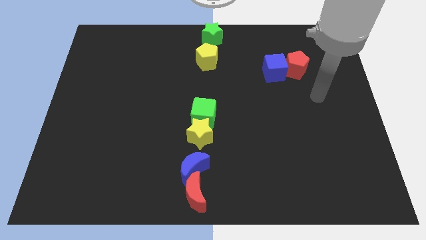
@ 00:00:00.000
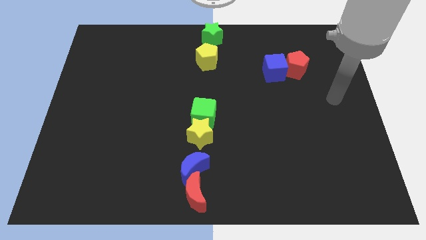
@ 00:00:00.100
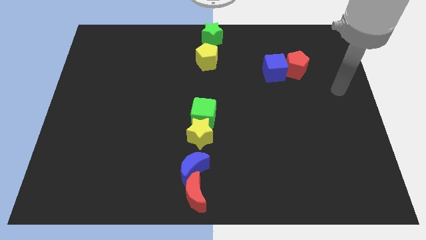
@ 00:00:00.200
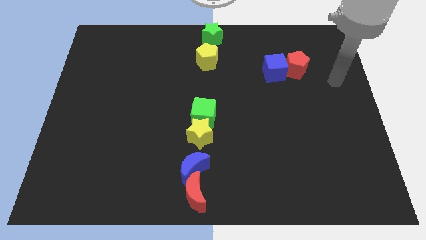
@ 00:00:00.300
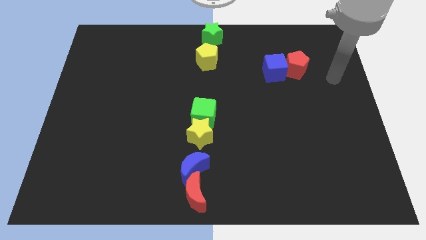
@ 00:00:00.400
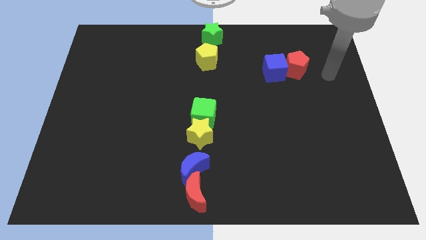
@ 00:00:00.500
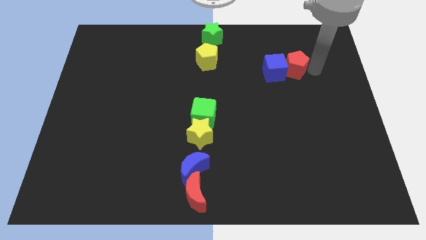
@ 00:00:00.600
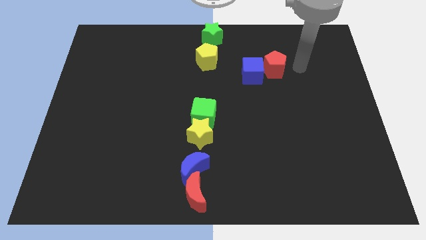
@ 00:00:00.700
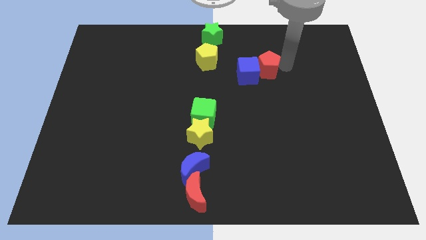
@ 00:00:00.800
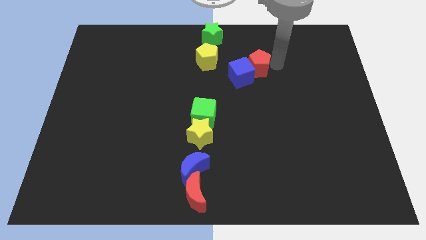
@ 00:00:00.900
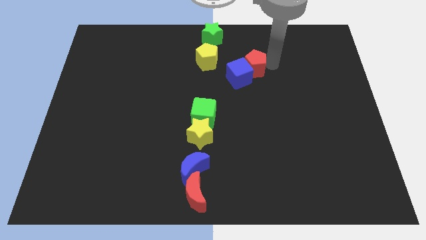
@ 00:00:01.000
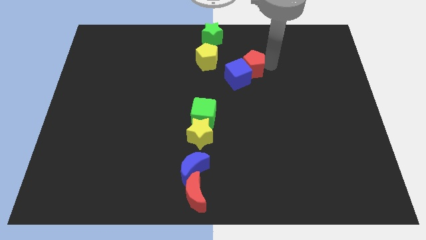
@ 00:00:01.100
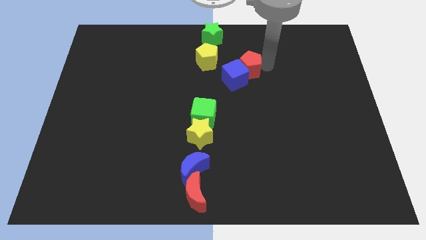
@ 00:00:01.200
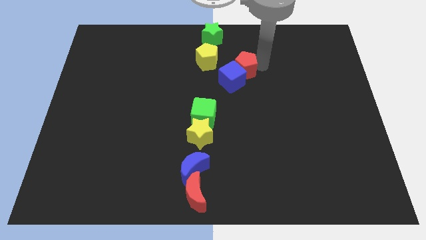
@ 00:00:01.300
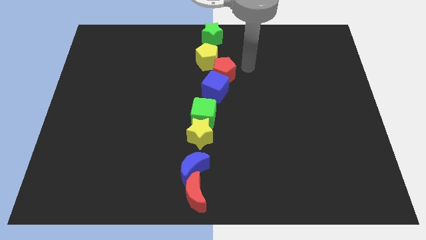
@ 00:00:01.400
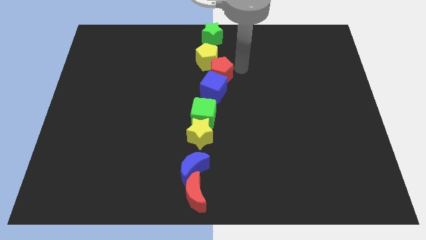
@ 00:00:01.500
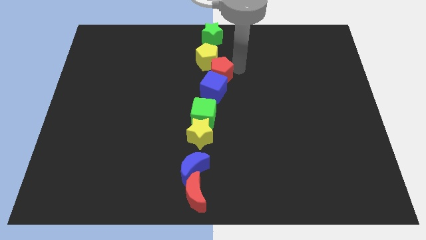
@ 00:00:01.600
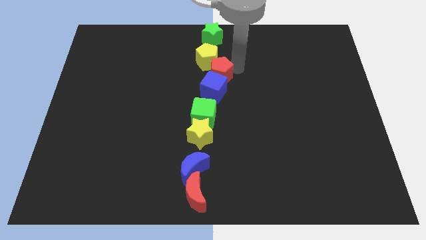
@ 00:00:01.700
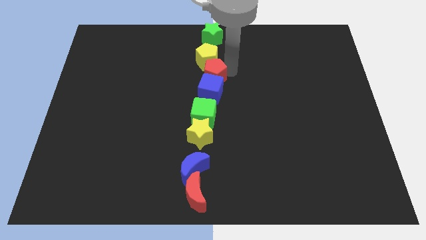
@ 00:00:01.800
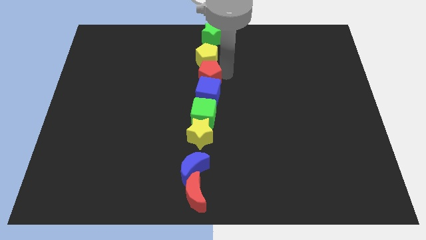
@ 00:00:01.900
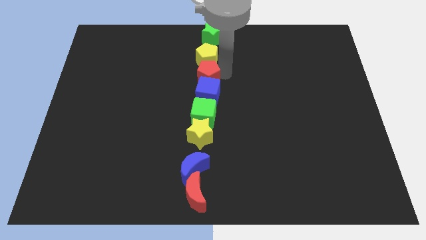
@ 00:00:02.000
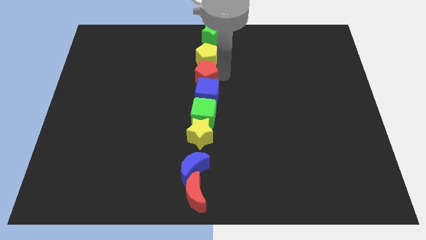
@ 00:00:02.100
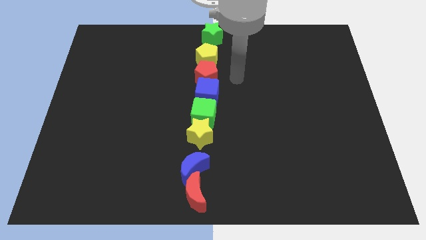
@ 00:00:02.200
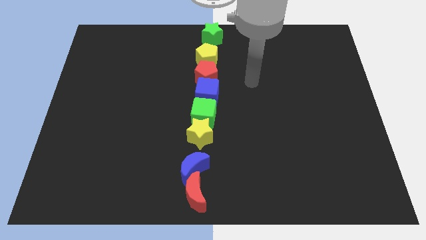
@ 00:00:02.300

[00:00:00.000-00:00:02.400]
move blue cube and red pentagon in between the yellow pentagon and blue cube

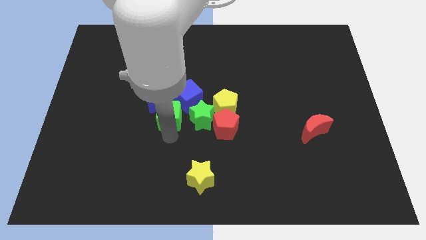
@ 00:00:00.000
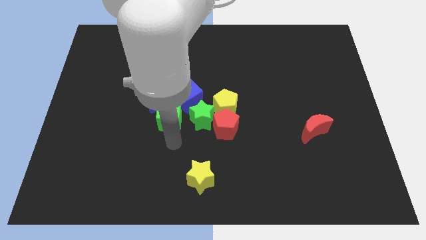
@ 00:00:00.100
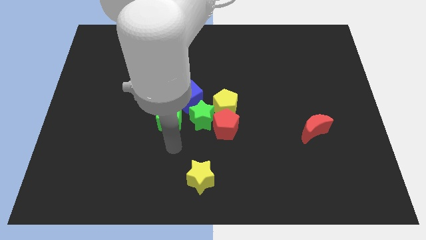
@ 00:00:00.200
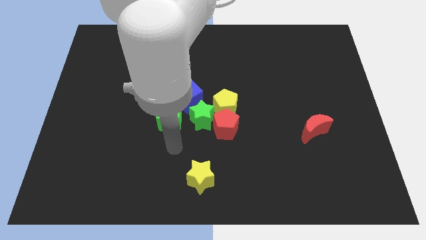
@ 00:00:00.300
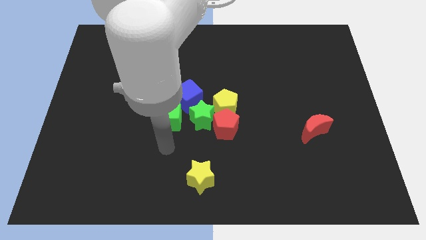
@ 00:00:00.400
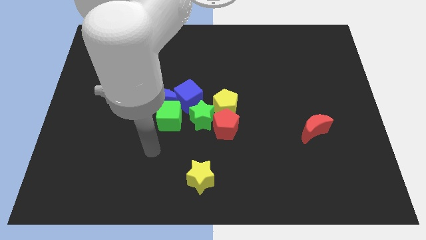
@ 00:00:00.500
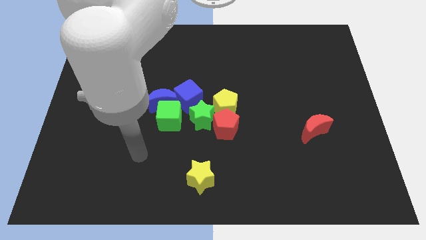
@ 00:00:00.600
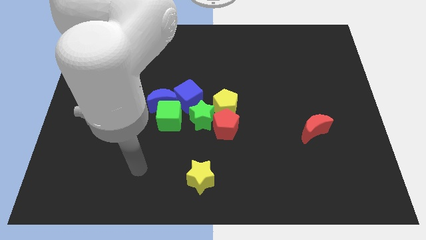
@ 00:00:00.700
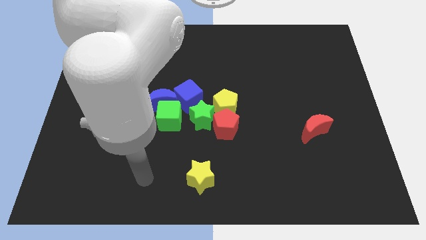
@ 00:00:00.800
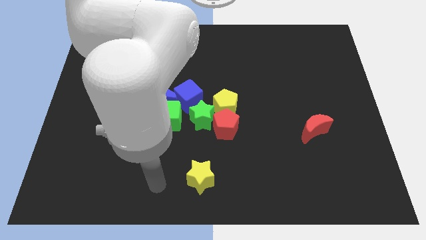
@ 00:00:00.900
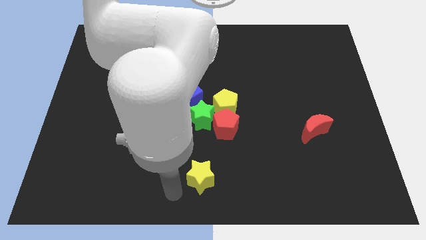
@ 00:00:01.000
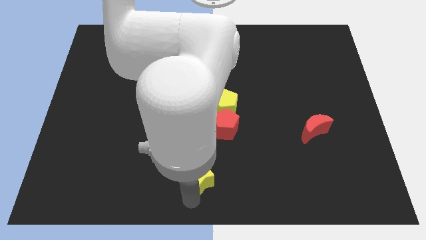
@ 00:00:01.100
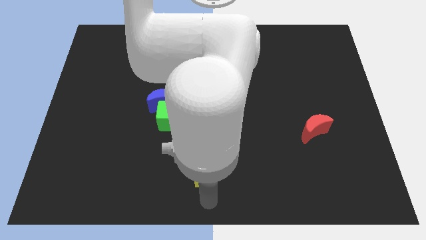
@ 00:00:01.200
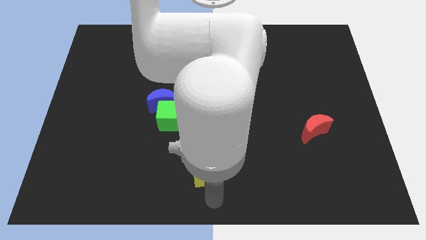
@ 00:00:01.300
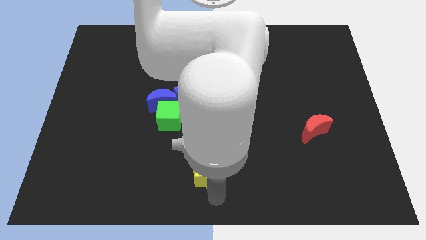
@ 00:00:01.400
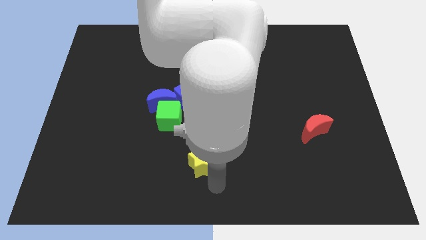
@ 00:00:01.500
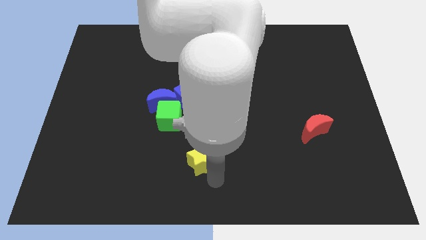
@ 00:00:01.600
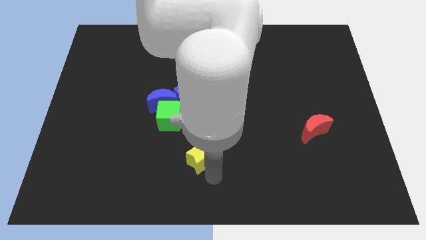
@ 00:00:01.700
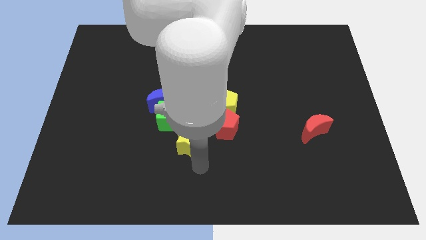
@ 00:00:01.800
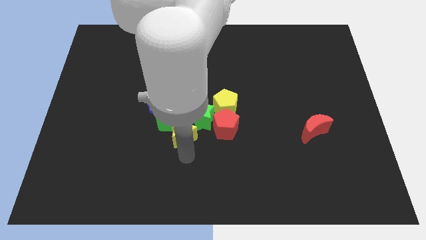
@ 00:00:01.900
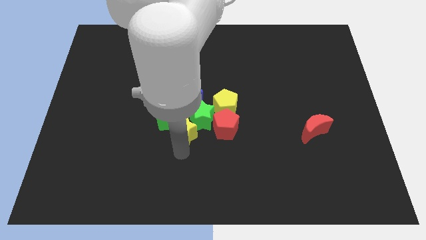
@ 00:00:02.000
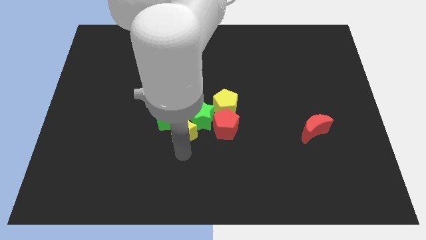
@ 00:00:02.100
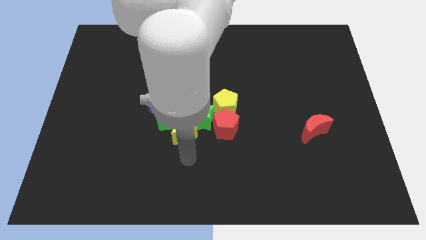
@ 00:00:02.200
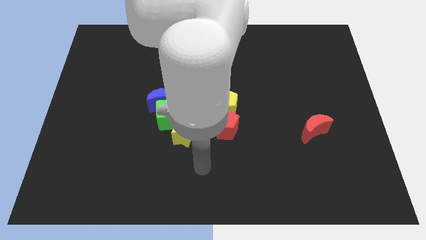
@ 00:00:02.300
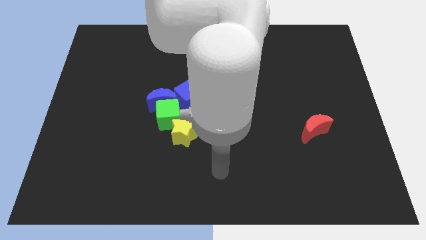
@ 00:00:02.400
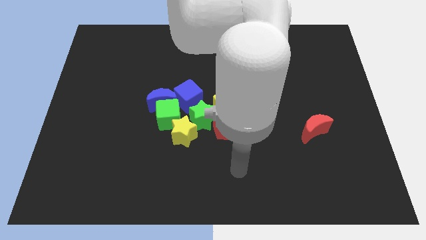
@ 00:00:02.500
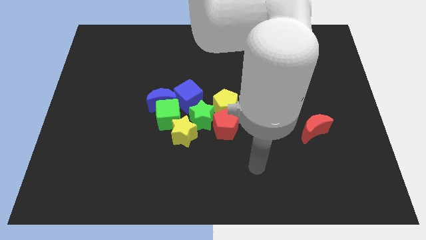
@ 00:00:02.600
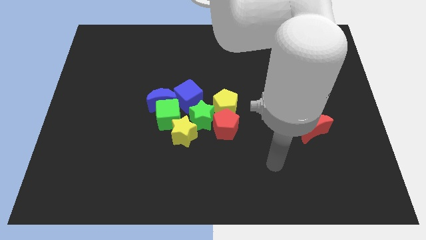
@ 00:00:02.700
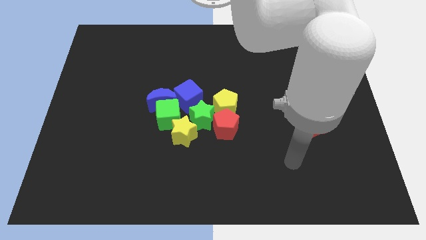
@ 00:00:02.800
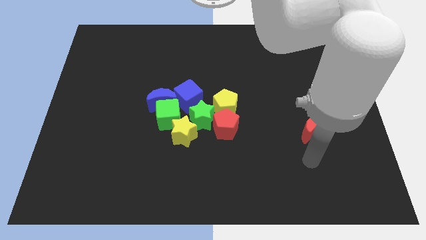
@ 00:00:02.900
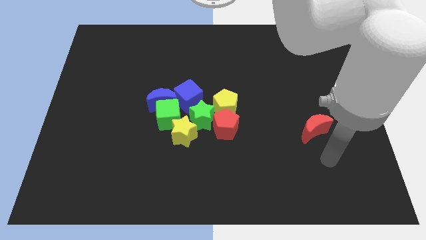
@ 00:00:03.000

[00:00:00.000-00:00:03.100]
push the yellow star towards the group of blocks

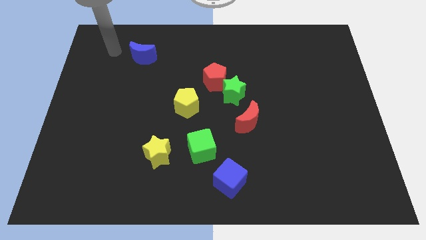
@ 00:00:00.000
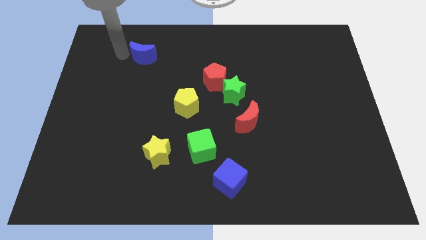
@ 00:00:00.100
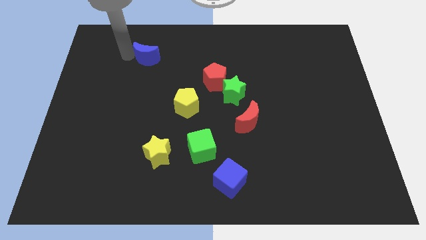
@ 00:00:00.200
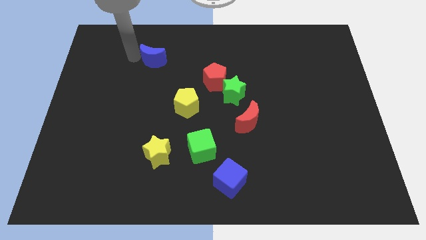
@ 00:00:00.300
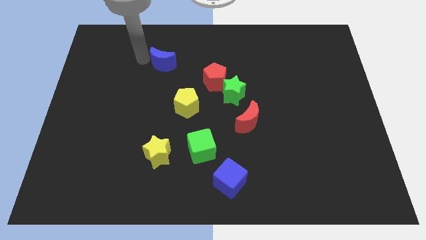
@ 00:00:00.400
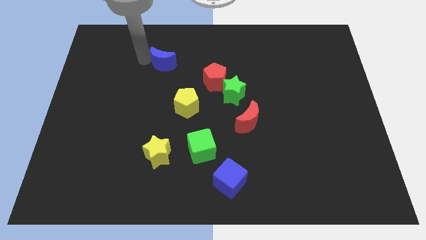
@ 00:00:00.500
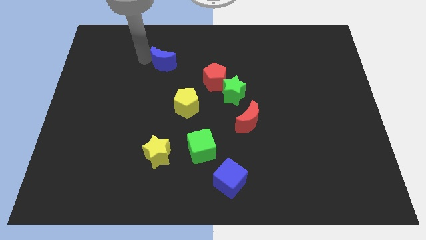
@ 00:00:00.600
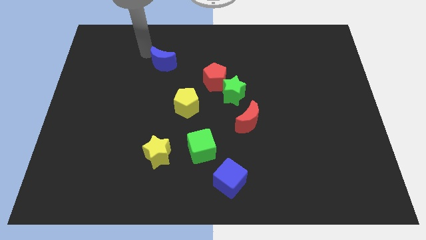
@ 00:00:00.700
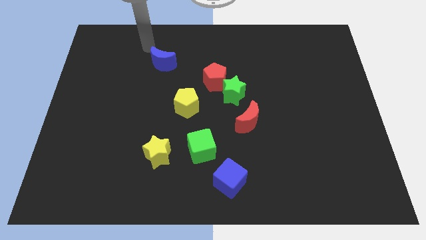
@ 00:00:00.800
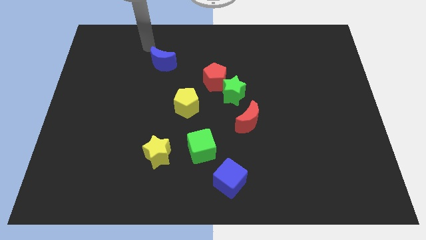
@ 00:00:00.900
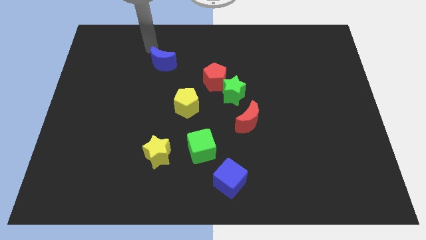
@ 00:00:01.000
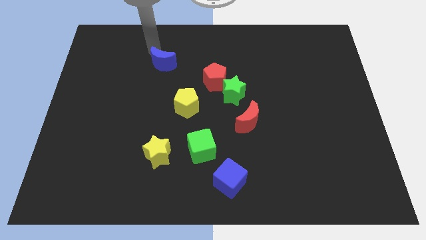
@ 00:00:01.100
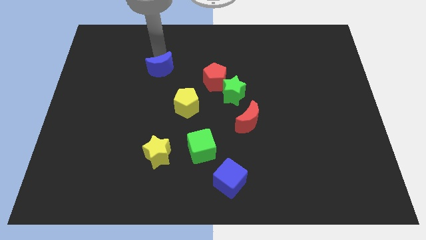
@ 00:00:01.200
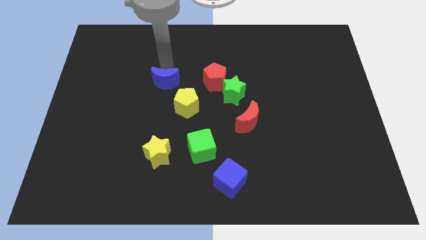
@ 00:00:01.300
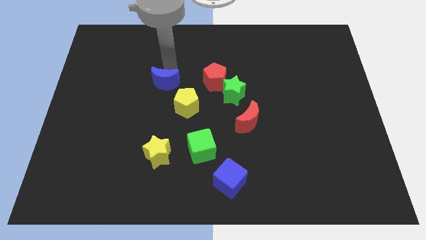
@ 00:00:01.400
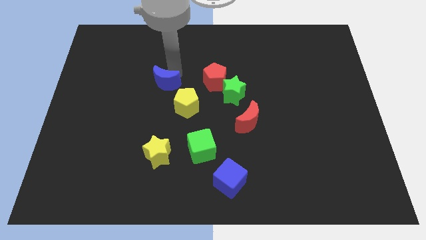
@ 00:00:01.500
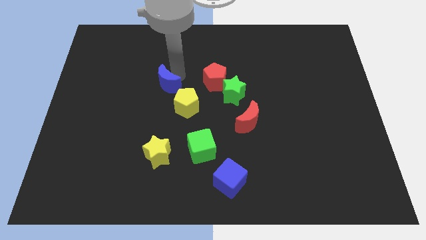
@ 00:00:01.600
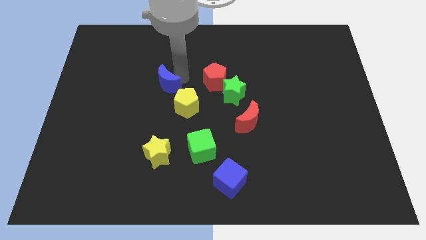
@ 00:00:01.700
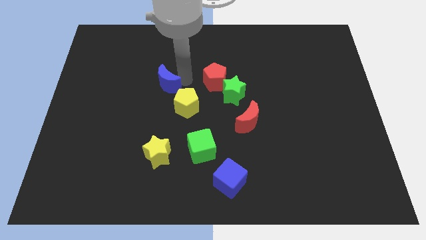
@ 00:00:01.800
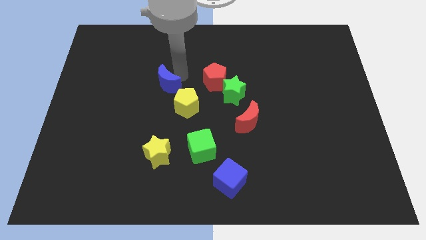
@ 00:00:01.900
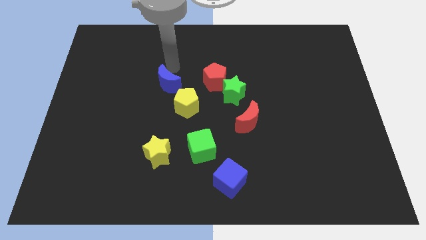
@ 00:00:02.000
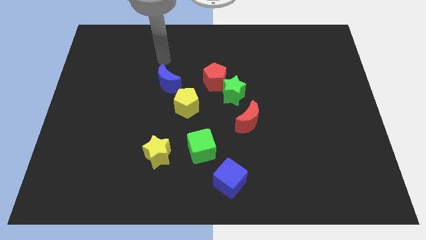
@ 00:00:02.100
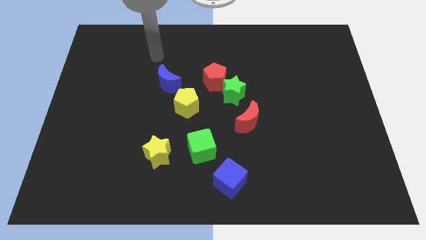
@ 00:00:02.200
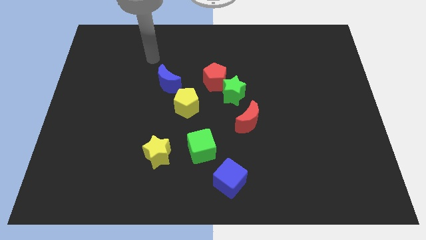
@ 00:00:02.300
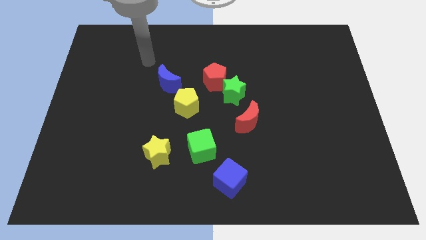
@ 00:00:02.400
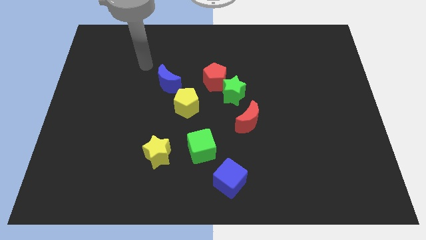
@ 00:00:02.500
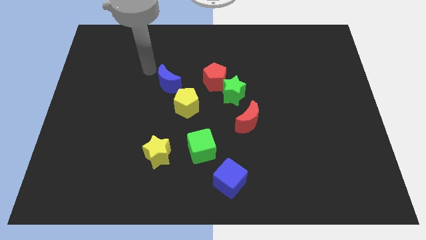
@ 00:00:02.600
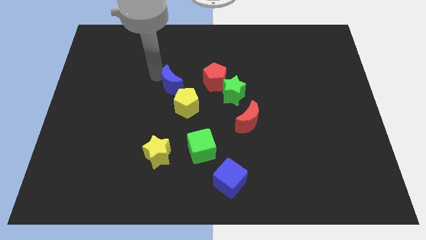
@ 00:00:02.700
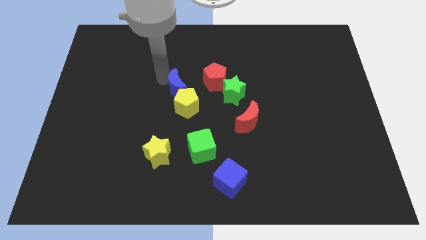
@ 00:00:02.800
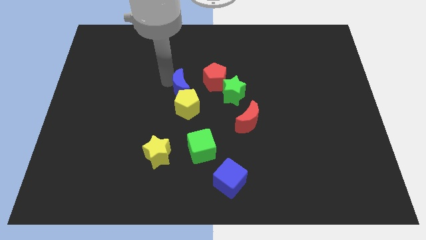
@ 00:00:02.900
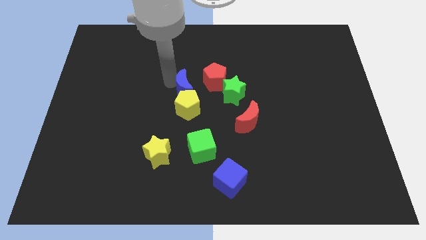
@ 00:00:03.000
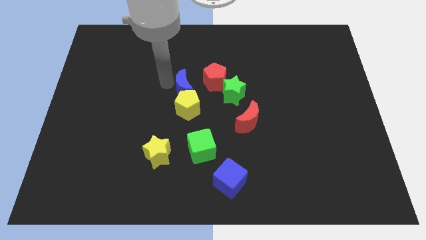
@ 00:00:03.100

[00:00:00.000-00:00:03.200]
move the blue crescent to the top of the yellow pentagon
